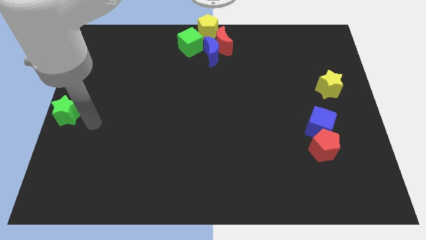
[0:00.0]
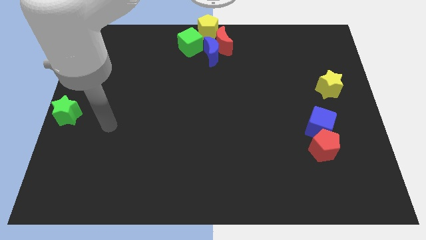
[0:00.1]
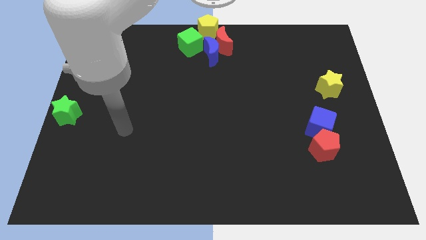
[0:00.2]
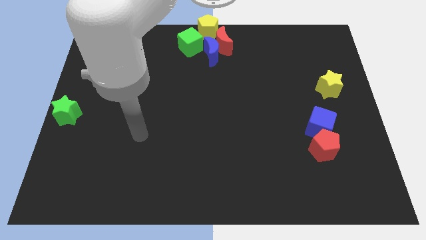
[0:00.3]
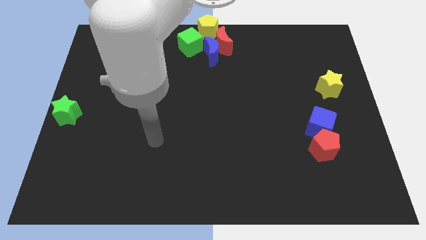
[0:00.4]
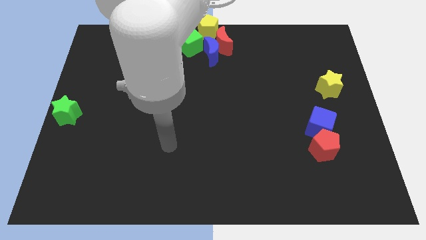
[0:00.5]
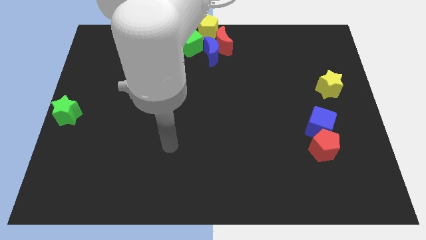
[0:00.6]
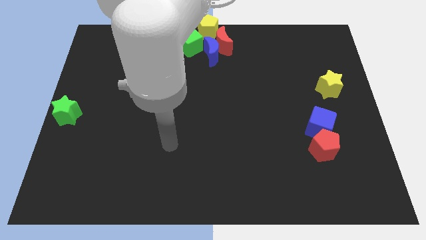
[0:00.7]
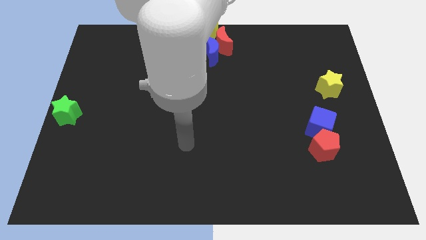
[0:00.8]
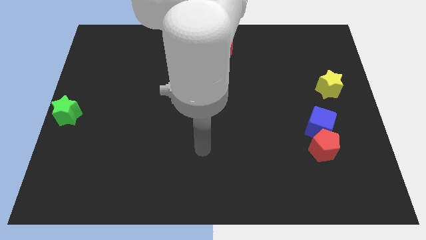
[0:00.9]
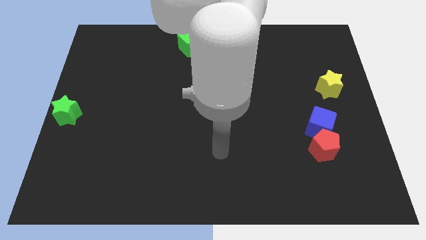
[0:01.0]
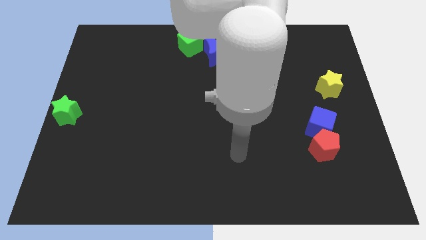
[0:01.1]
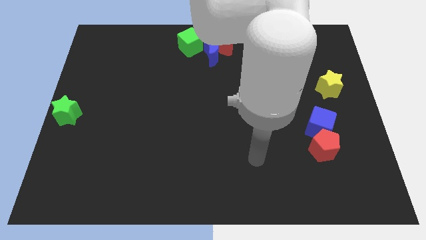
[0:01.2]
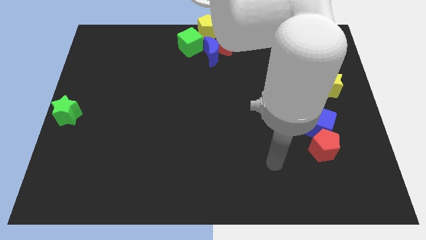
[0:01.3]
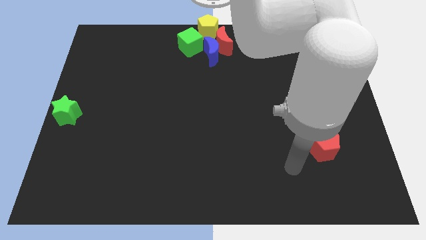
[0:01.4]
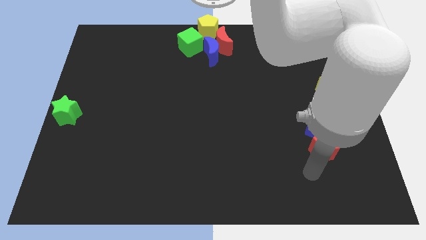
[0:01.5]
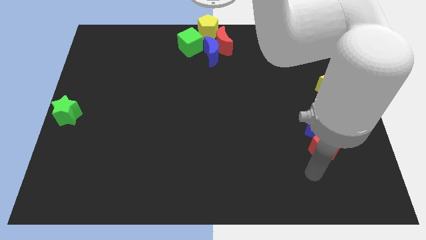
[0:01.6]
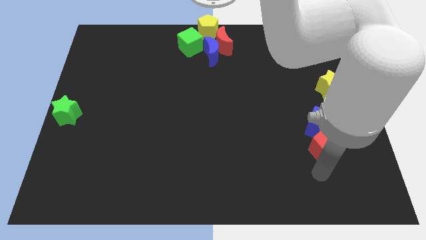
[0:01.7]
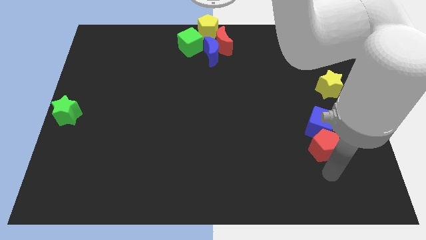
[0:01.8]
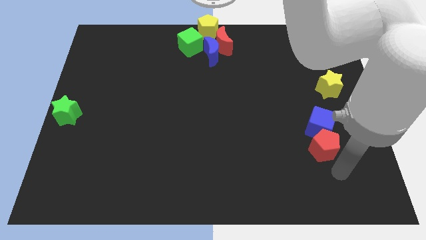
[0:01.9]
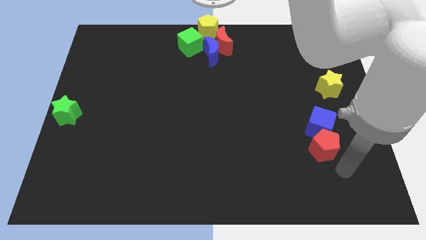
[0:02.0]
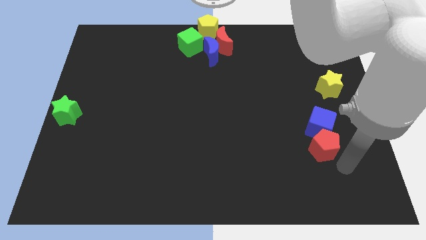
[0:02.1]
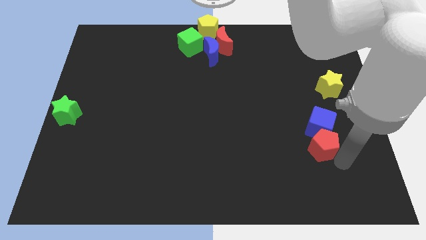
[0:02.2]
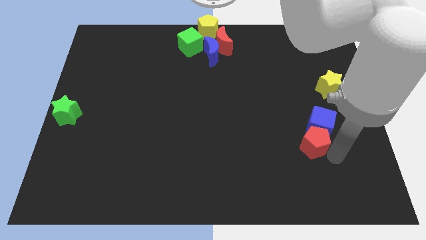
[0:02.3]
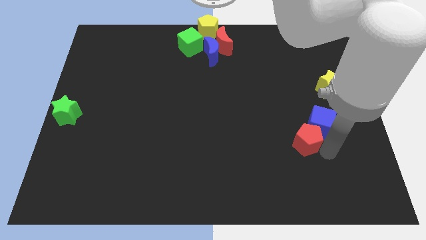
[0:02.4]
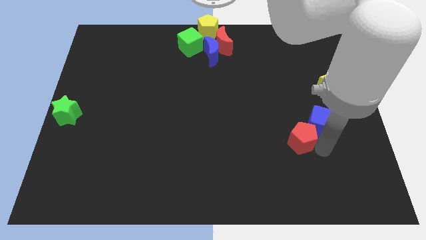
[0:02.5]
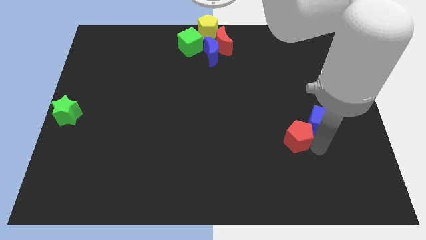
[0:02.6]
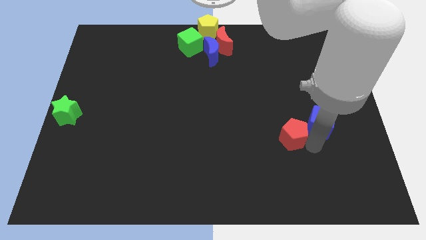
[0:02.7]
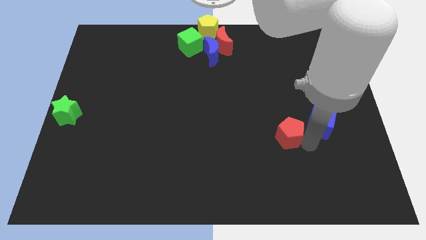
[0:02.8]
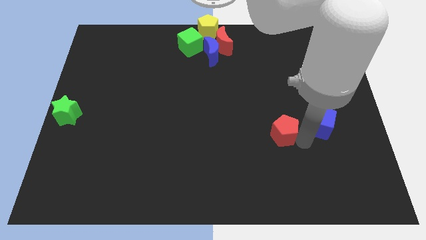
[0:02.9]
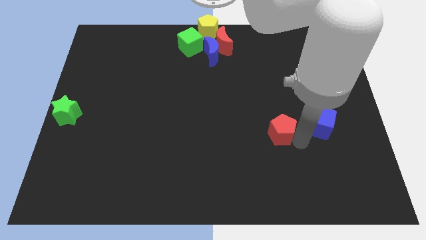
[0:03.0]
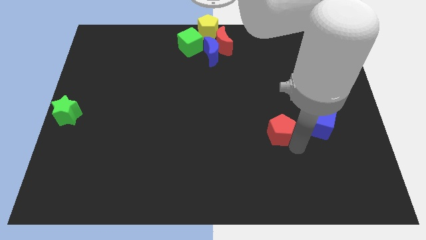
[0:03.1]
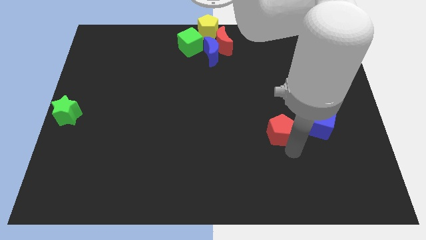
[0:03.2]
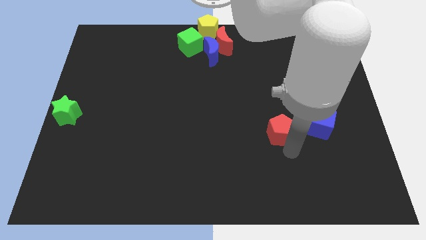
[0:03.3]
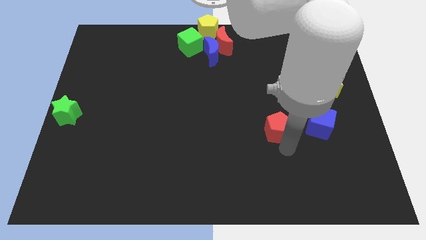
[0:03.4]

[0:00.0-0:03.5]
push the red pentagon towards the center of the board

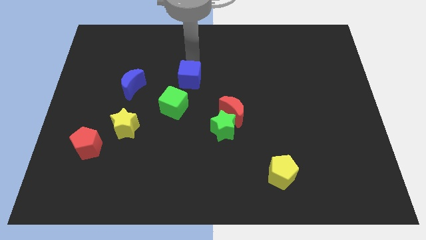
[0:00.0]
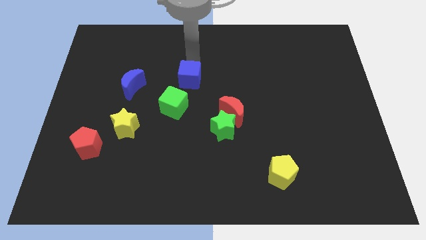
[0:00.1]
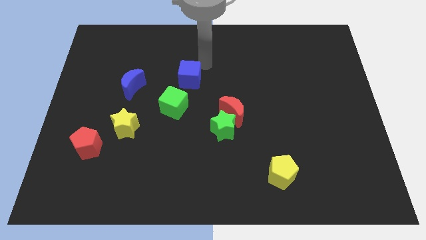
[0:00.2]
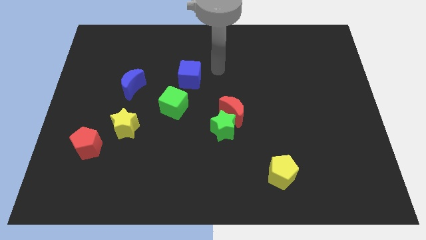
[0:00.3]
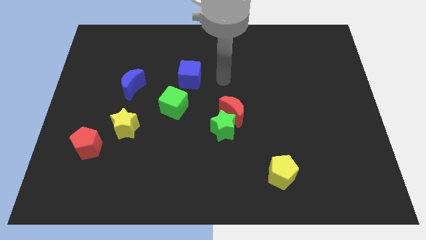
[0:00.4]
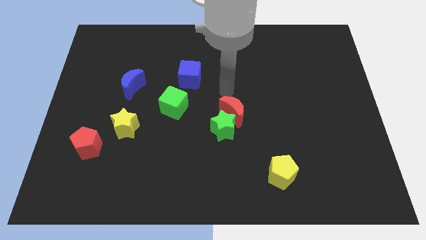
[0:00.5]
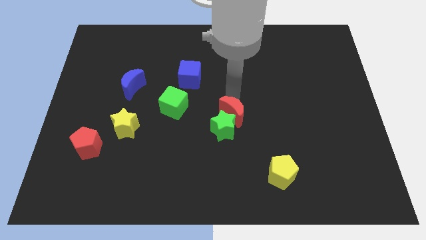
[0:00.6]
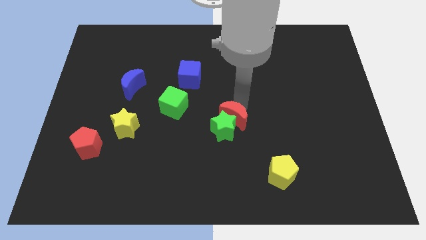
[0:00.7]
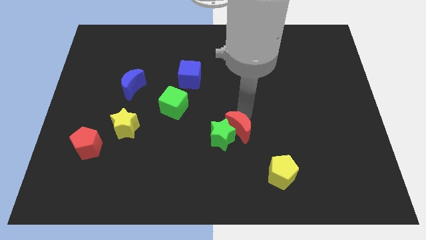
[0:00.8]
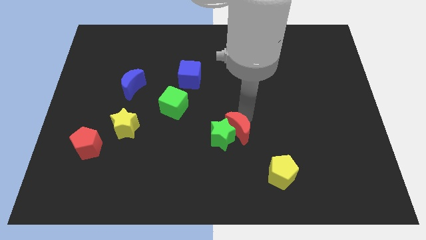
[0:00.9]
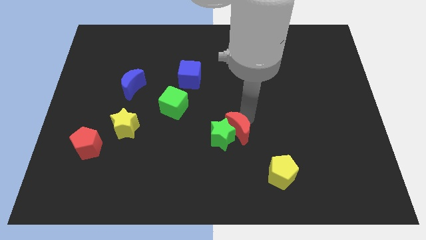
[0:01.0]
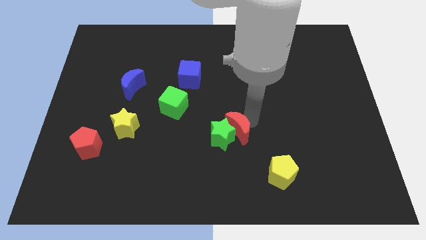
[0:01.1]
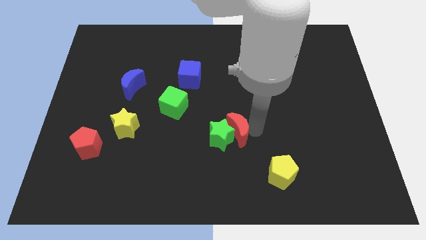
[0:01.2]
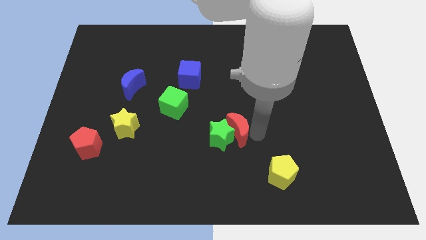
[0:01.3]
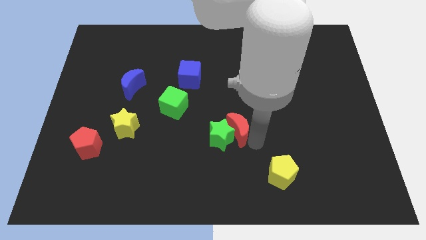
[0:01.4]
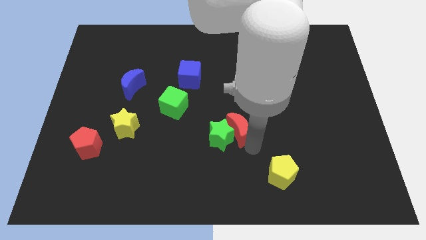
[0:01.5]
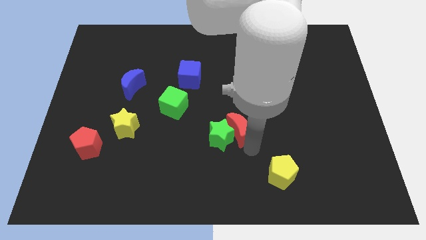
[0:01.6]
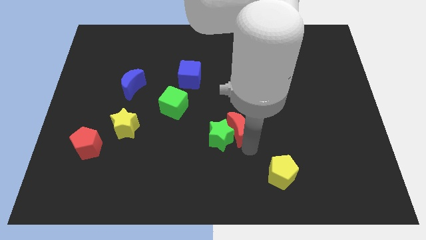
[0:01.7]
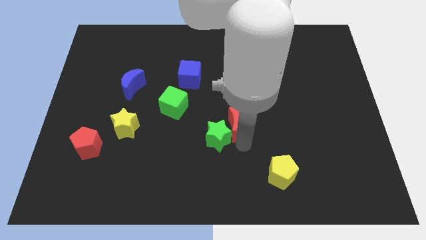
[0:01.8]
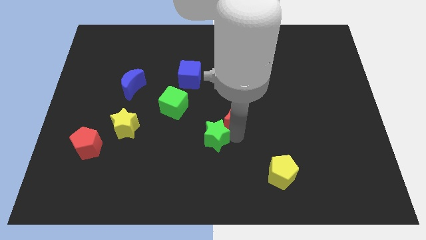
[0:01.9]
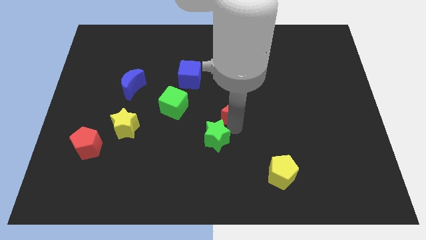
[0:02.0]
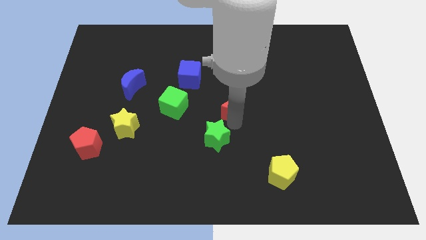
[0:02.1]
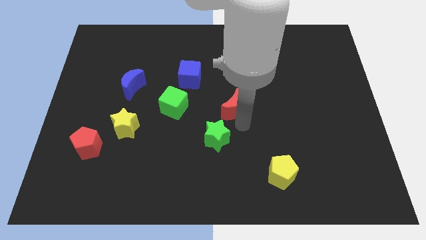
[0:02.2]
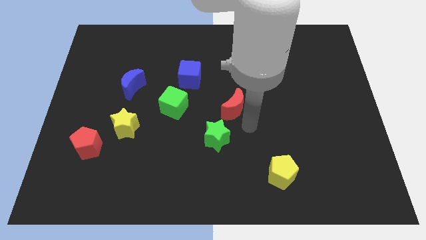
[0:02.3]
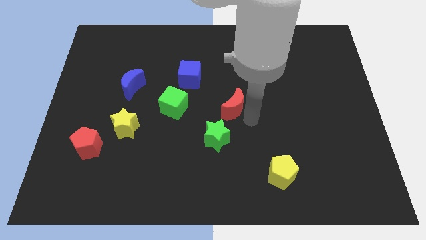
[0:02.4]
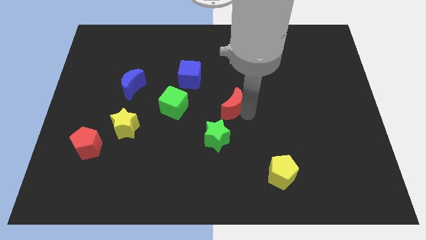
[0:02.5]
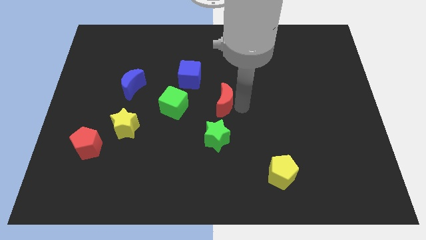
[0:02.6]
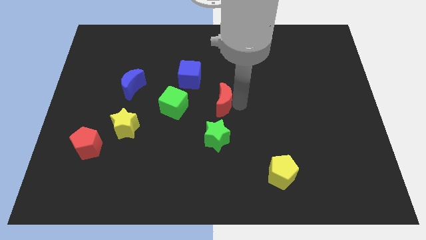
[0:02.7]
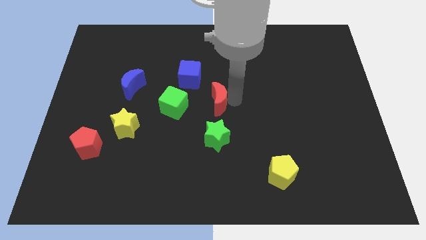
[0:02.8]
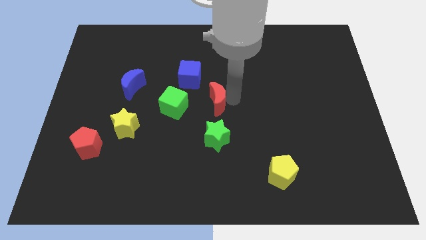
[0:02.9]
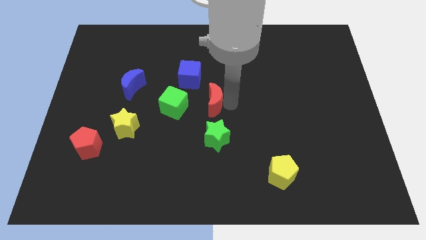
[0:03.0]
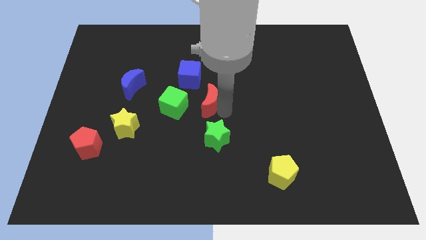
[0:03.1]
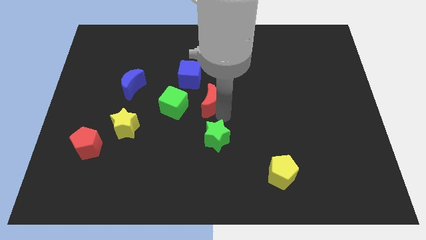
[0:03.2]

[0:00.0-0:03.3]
separate the red moon and the green star

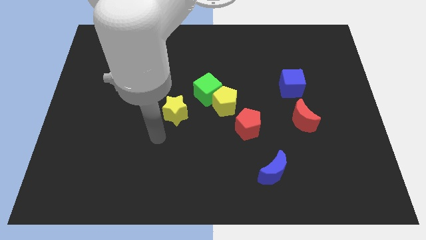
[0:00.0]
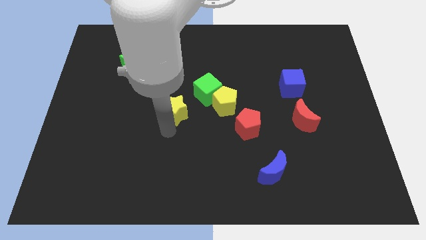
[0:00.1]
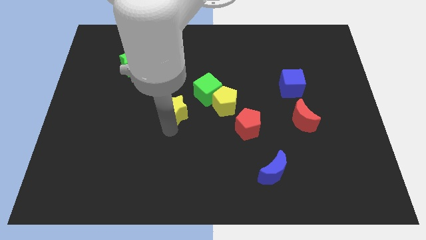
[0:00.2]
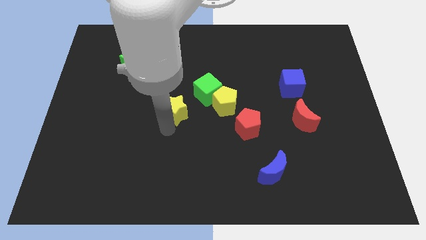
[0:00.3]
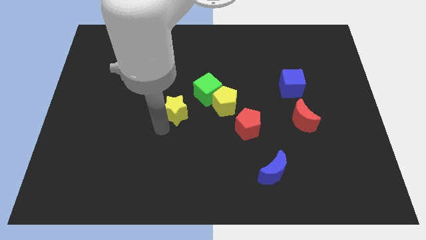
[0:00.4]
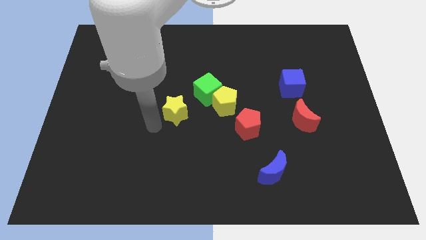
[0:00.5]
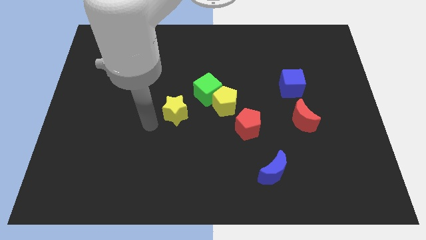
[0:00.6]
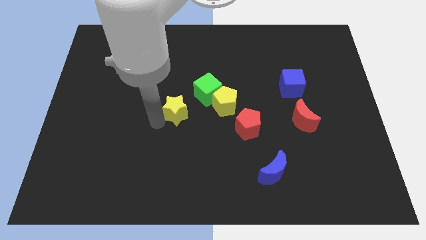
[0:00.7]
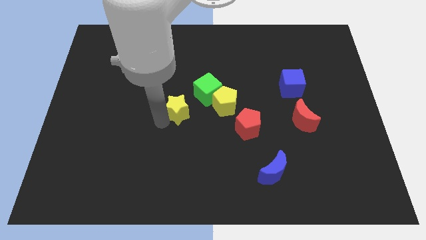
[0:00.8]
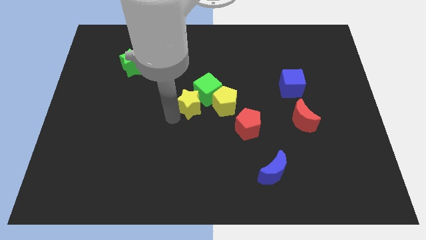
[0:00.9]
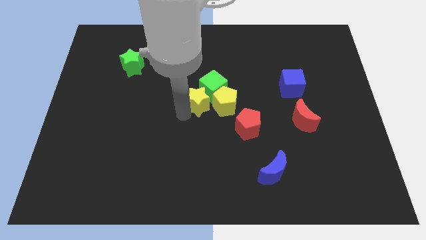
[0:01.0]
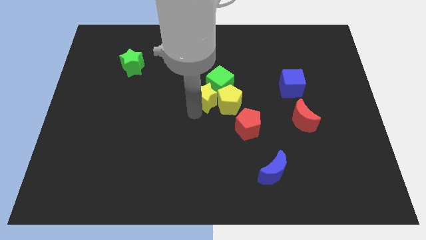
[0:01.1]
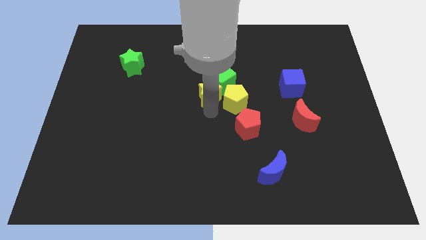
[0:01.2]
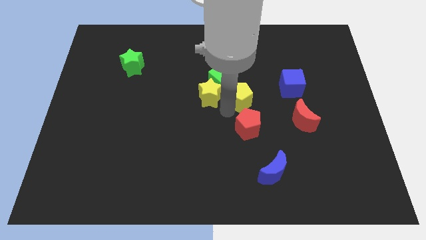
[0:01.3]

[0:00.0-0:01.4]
push the yellow star into the green cube

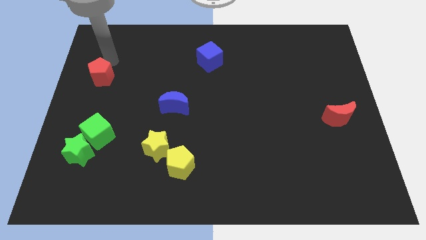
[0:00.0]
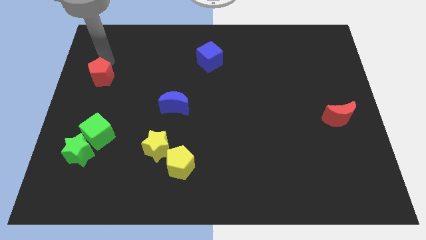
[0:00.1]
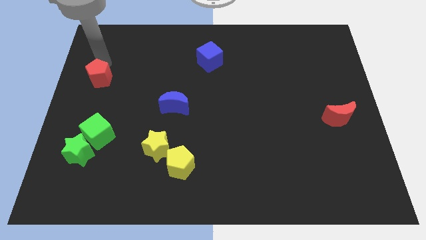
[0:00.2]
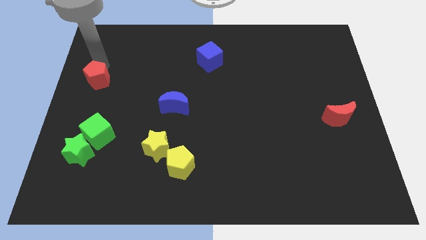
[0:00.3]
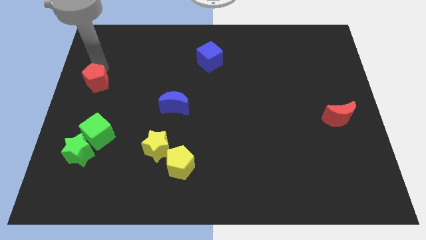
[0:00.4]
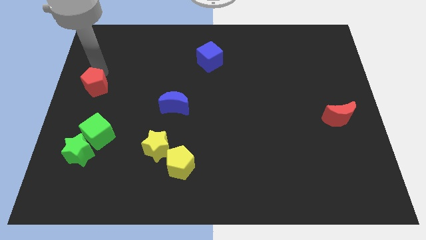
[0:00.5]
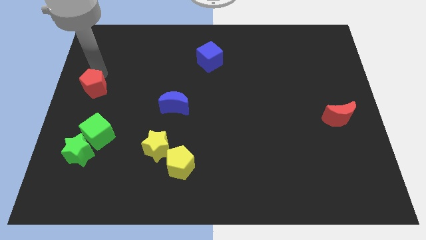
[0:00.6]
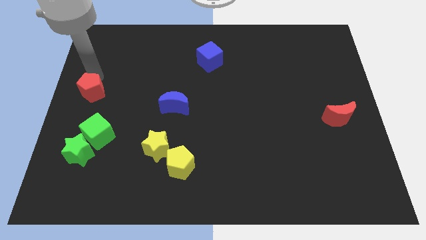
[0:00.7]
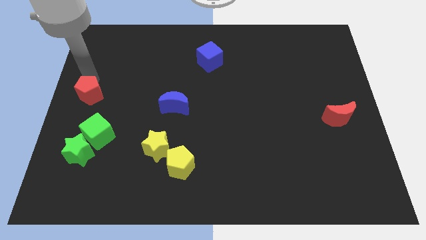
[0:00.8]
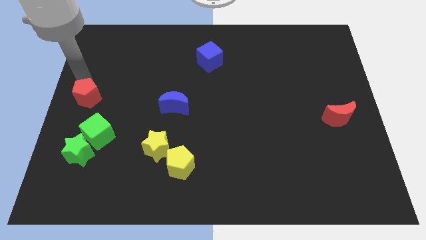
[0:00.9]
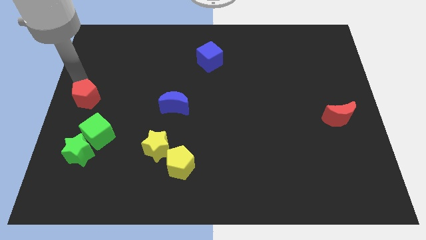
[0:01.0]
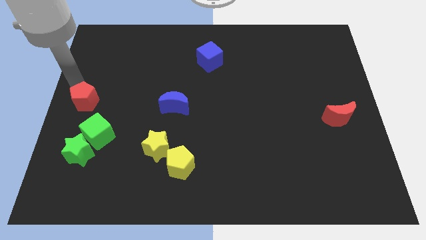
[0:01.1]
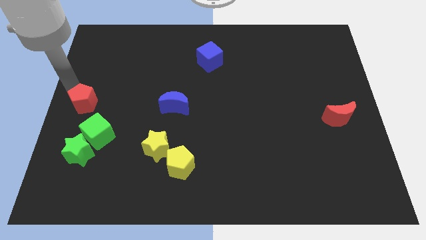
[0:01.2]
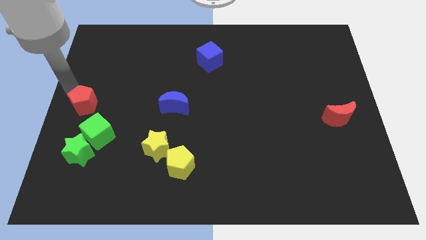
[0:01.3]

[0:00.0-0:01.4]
push the red pentagon towards the top of the green cube
